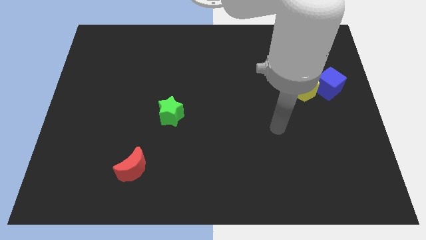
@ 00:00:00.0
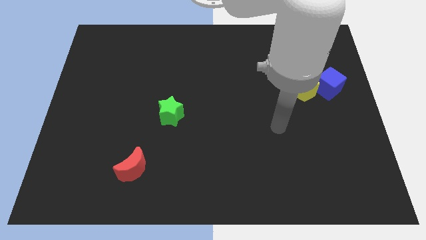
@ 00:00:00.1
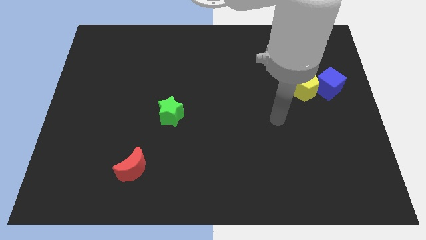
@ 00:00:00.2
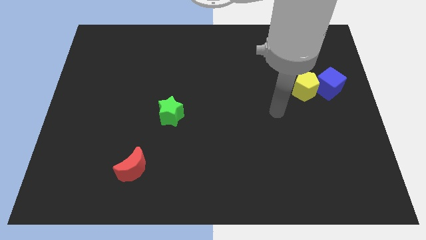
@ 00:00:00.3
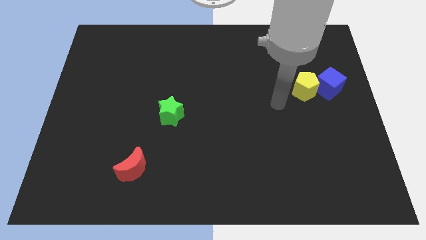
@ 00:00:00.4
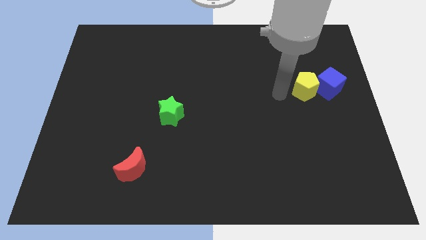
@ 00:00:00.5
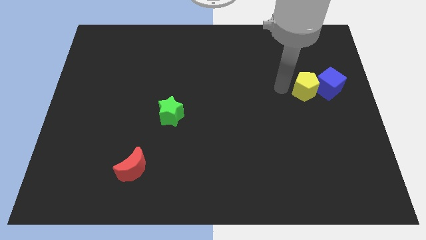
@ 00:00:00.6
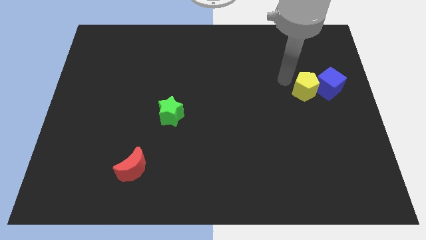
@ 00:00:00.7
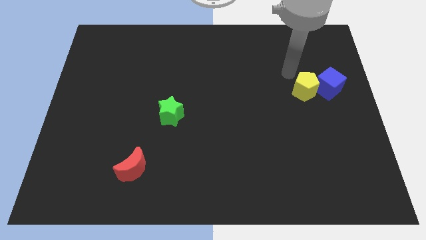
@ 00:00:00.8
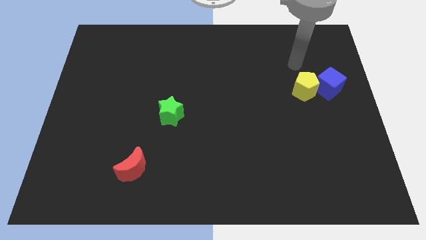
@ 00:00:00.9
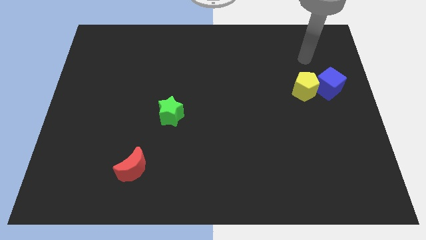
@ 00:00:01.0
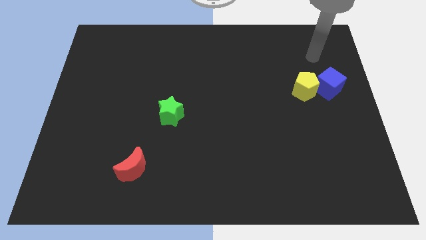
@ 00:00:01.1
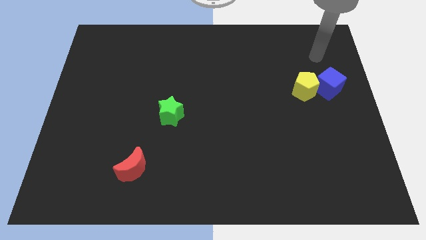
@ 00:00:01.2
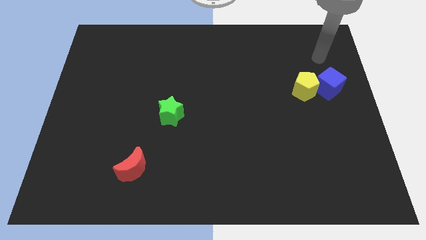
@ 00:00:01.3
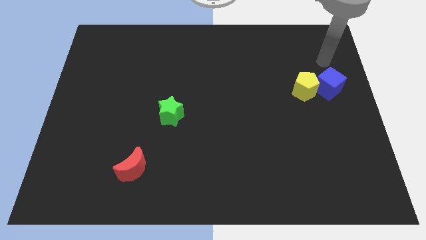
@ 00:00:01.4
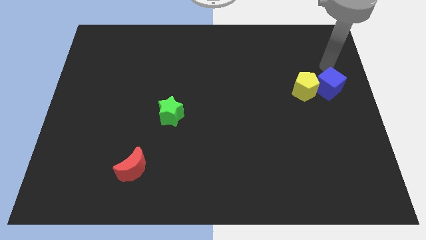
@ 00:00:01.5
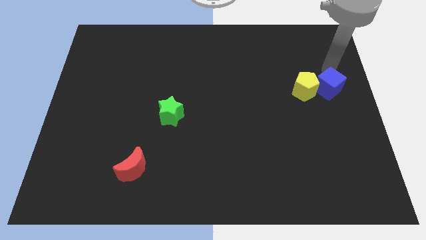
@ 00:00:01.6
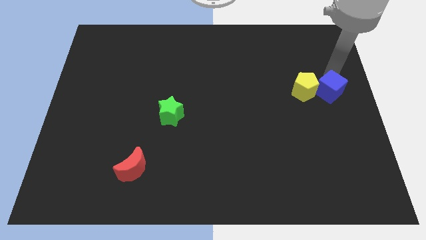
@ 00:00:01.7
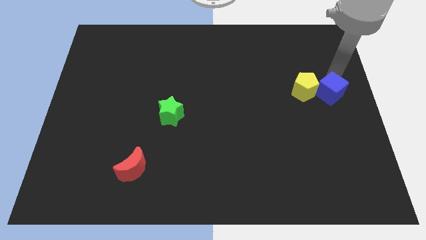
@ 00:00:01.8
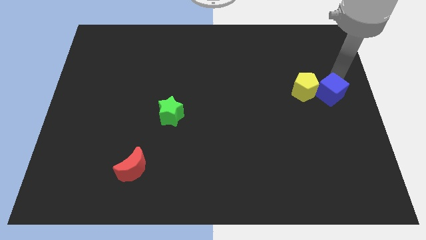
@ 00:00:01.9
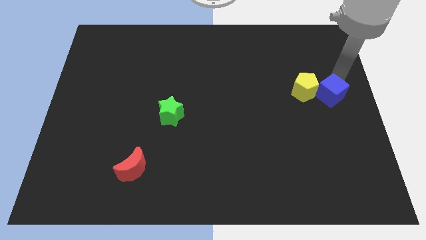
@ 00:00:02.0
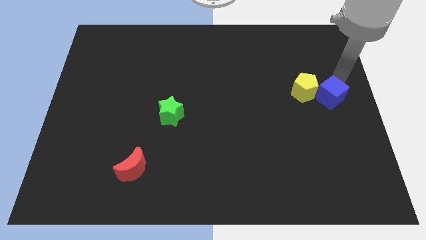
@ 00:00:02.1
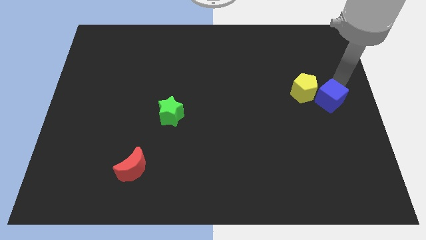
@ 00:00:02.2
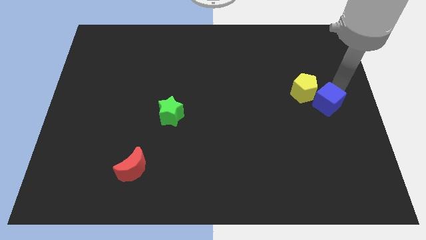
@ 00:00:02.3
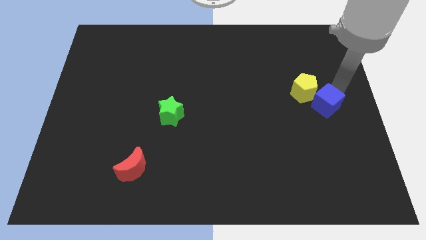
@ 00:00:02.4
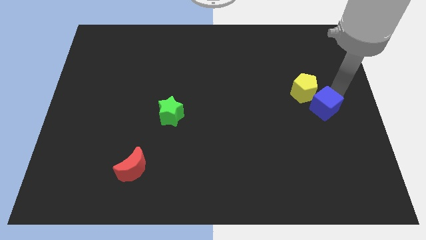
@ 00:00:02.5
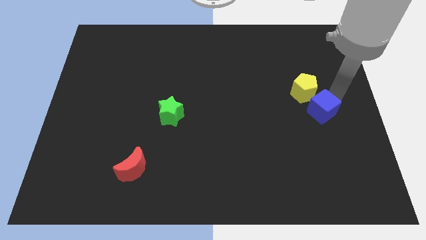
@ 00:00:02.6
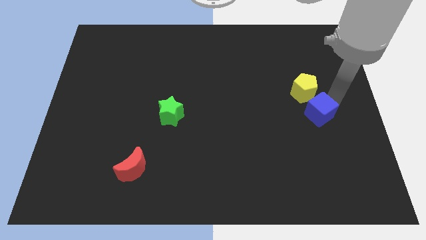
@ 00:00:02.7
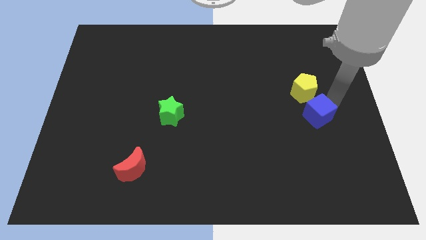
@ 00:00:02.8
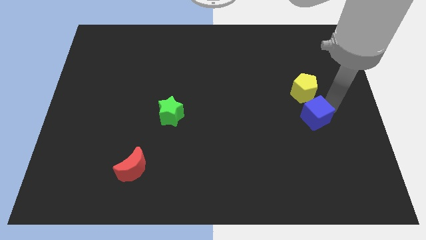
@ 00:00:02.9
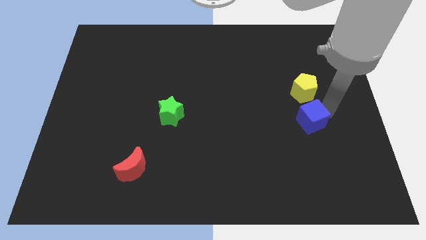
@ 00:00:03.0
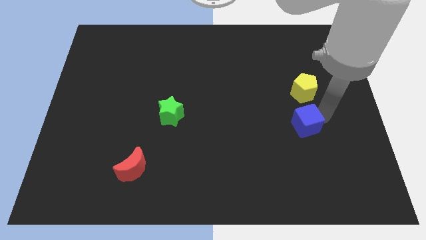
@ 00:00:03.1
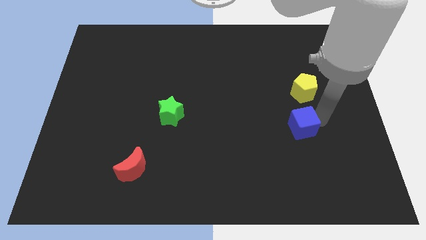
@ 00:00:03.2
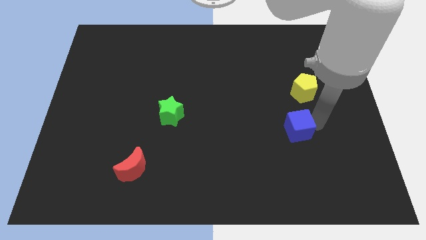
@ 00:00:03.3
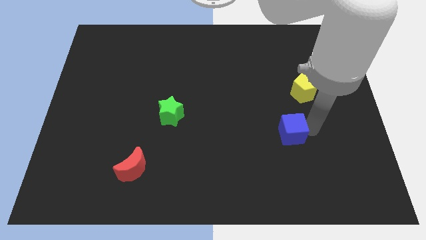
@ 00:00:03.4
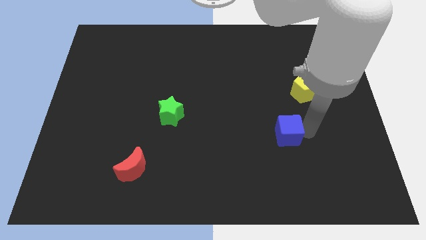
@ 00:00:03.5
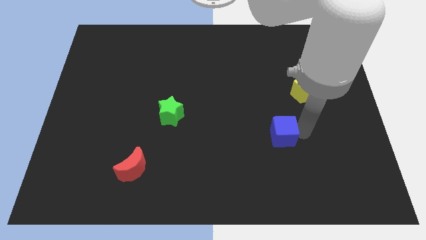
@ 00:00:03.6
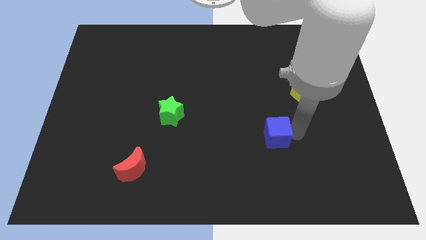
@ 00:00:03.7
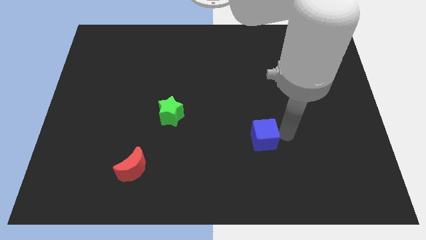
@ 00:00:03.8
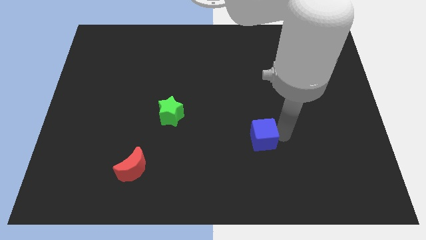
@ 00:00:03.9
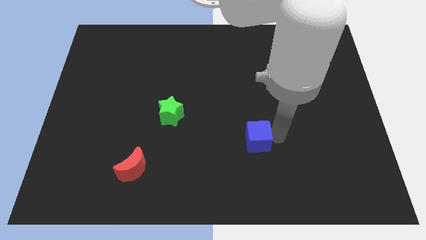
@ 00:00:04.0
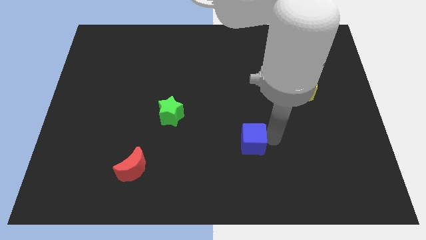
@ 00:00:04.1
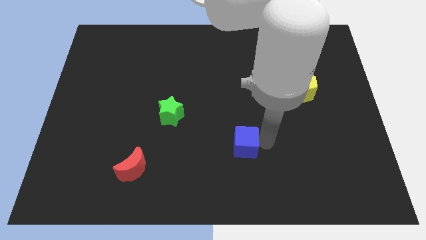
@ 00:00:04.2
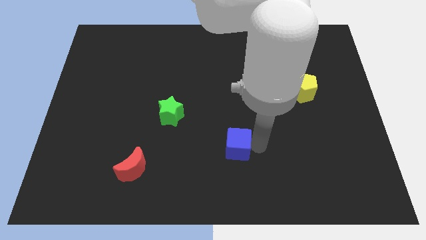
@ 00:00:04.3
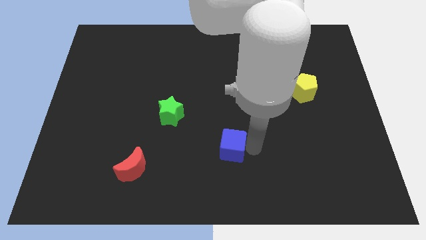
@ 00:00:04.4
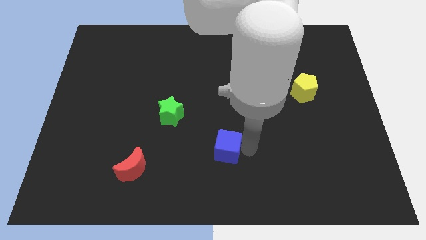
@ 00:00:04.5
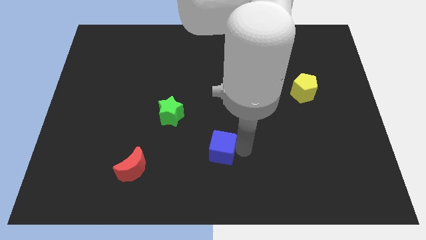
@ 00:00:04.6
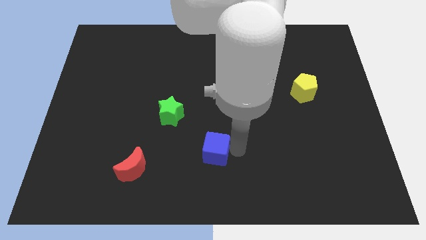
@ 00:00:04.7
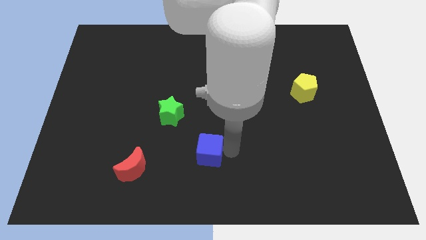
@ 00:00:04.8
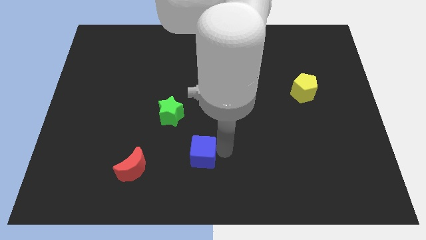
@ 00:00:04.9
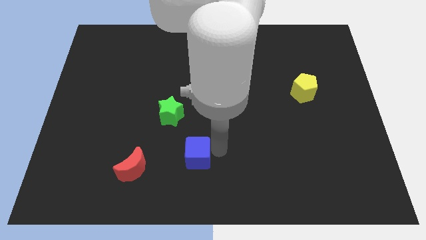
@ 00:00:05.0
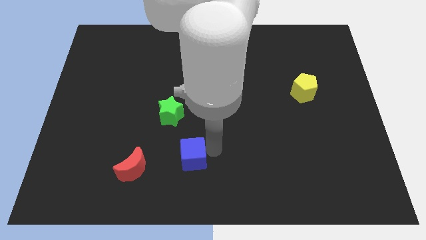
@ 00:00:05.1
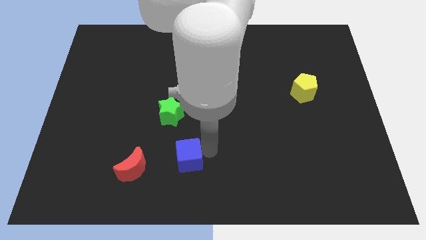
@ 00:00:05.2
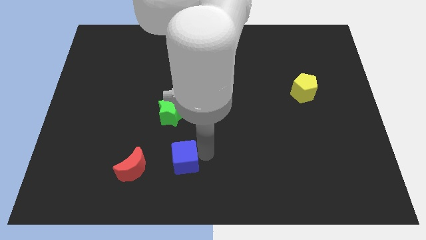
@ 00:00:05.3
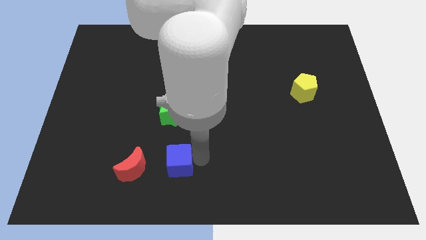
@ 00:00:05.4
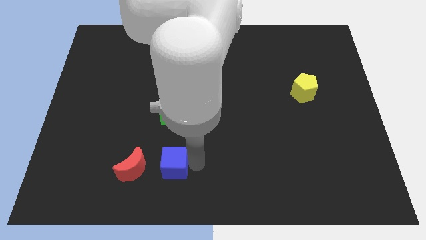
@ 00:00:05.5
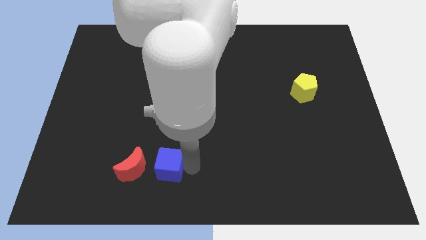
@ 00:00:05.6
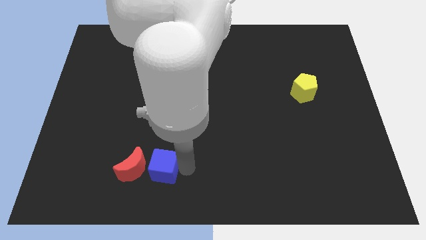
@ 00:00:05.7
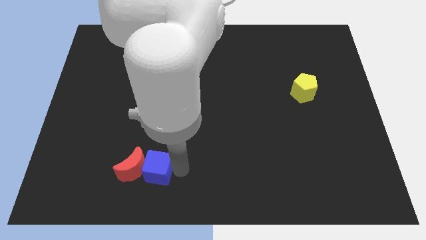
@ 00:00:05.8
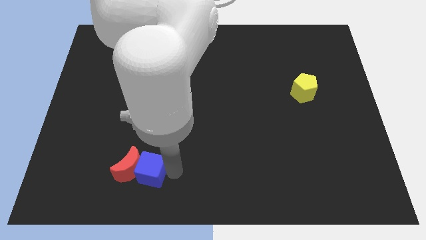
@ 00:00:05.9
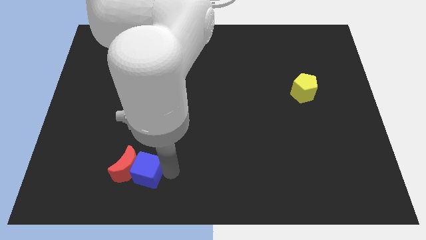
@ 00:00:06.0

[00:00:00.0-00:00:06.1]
put the blue block close to the red moon

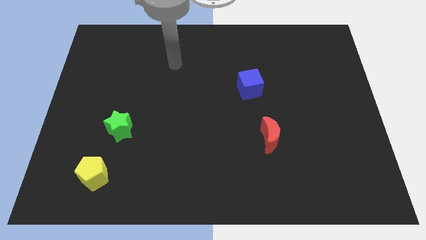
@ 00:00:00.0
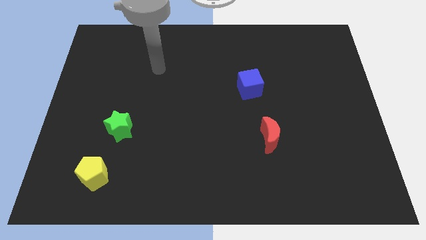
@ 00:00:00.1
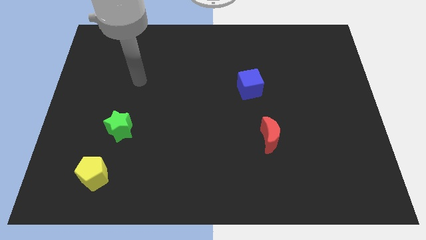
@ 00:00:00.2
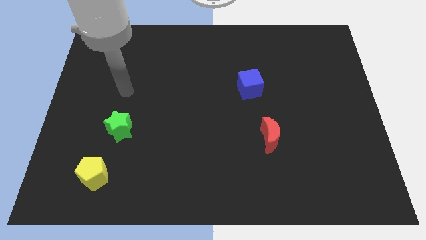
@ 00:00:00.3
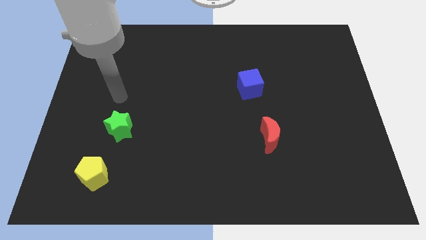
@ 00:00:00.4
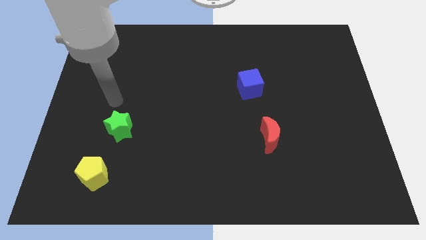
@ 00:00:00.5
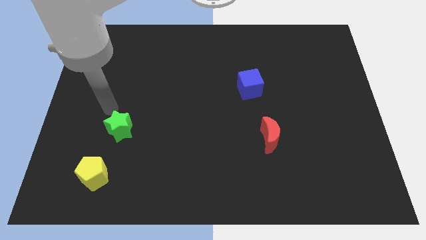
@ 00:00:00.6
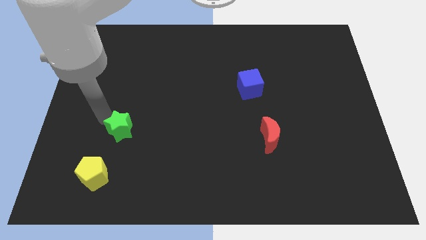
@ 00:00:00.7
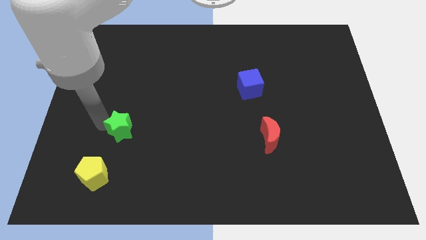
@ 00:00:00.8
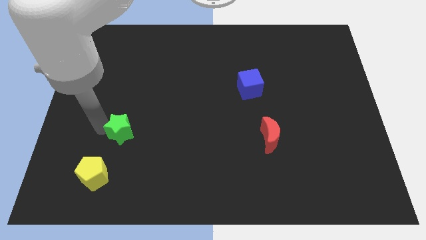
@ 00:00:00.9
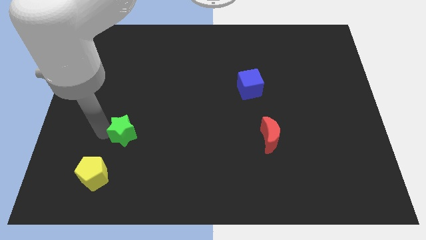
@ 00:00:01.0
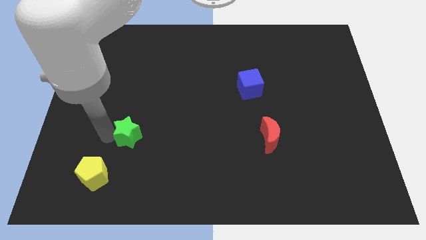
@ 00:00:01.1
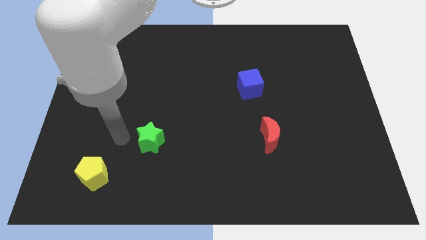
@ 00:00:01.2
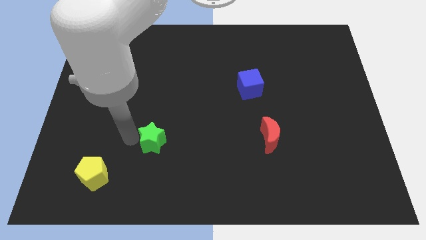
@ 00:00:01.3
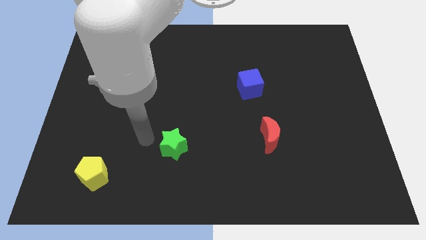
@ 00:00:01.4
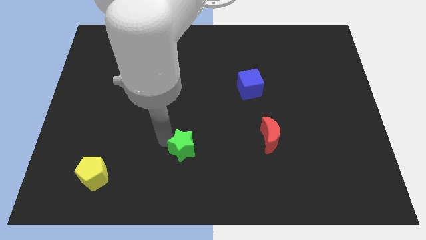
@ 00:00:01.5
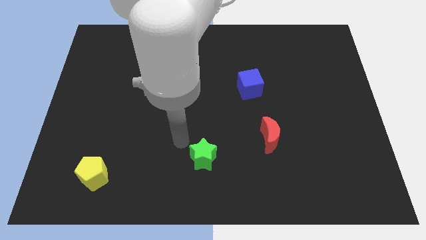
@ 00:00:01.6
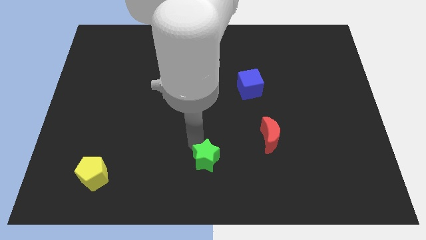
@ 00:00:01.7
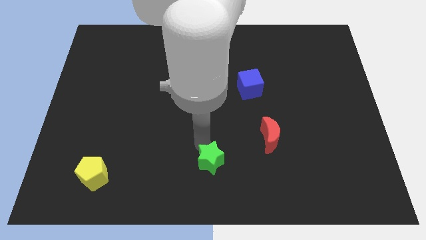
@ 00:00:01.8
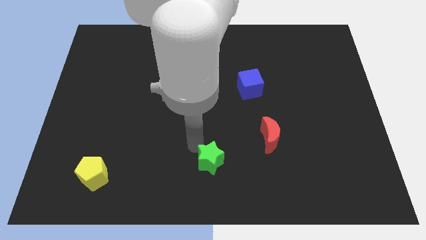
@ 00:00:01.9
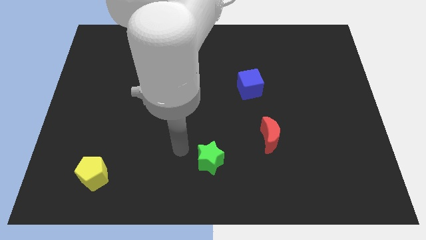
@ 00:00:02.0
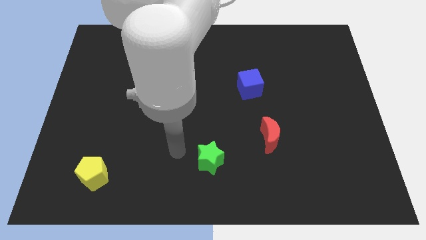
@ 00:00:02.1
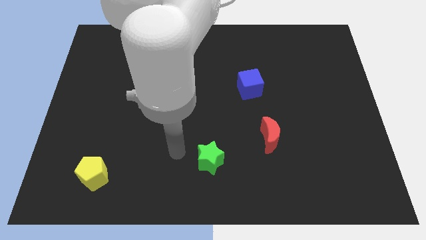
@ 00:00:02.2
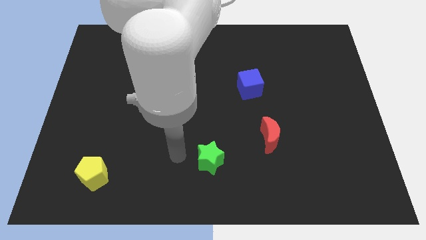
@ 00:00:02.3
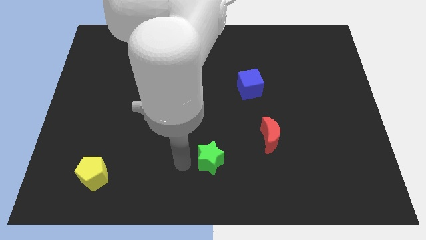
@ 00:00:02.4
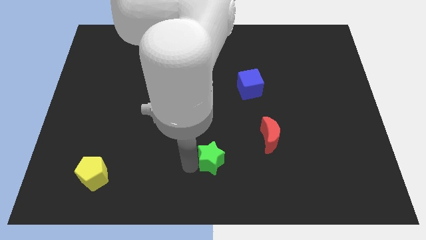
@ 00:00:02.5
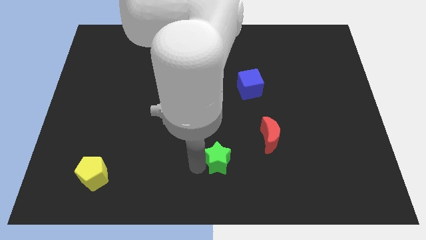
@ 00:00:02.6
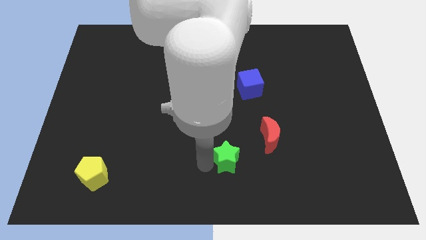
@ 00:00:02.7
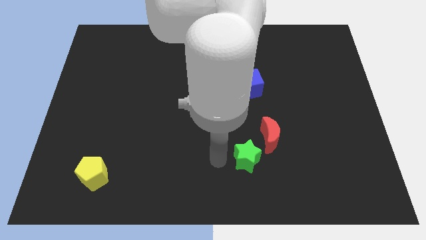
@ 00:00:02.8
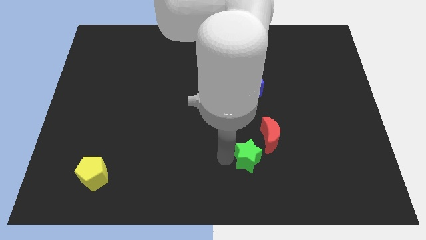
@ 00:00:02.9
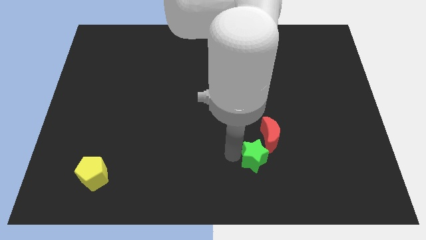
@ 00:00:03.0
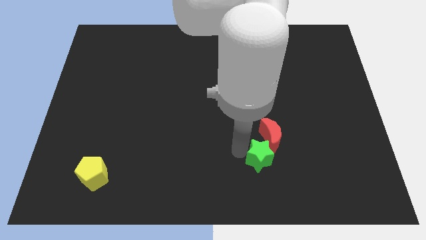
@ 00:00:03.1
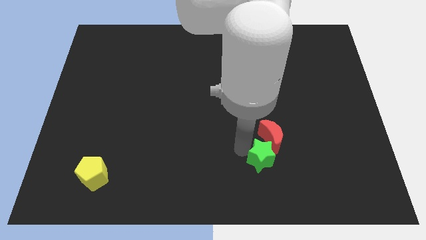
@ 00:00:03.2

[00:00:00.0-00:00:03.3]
slide the green star towards the moon
